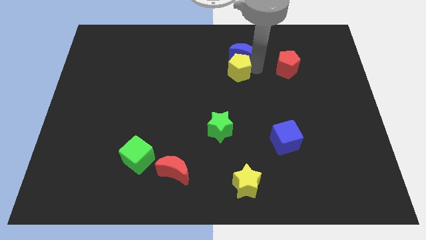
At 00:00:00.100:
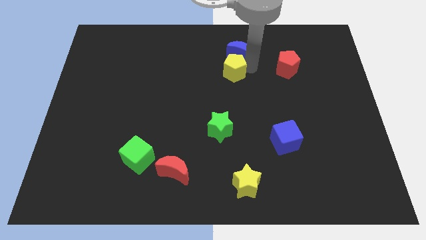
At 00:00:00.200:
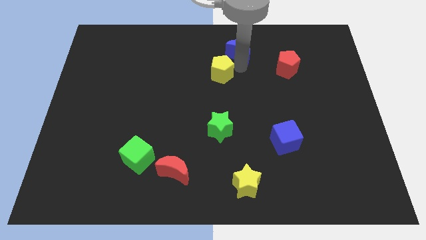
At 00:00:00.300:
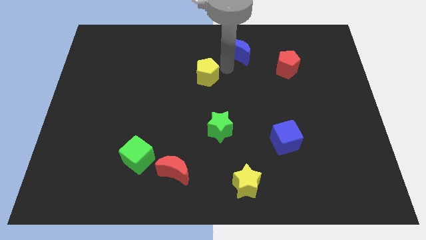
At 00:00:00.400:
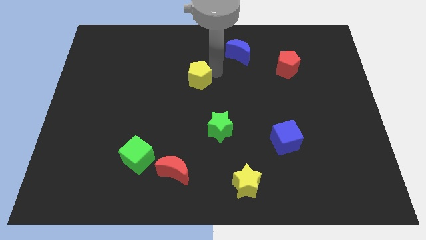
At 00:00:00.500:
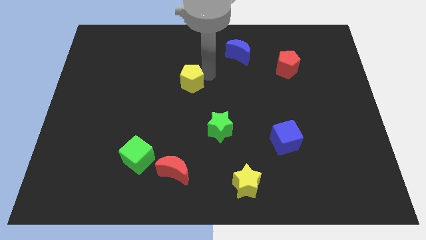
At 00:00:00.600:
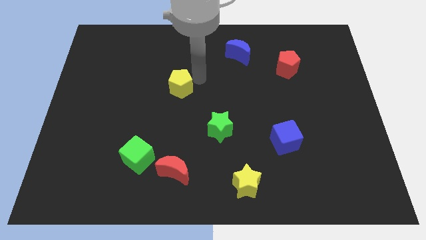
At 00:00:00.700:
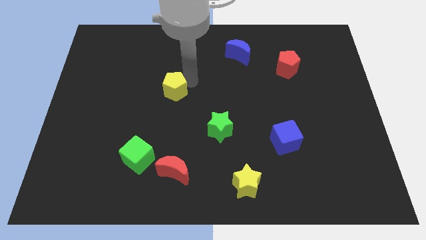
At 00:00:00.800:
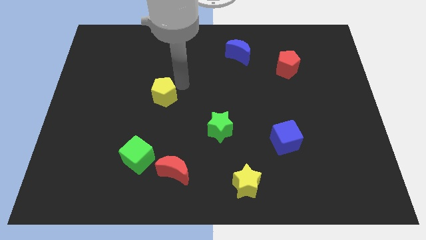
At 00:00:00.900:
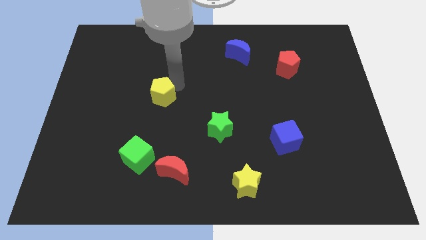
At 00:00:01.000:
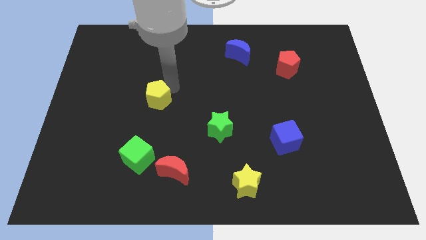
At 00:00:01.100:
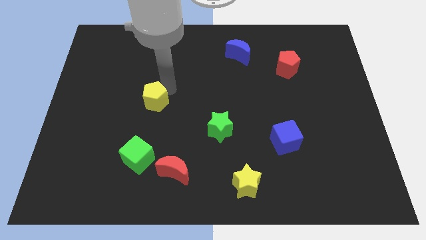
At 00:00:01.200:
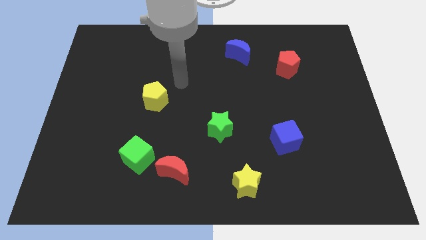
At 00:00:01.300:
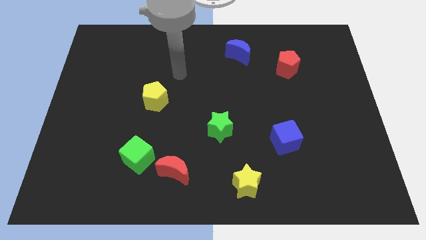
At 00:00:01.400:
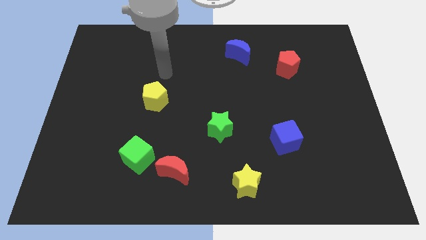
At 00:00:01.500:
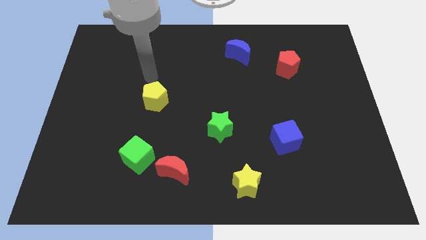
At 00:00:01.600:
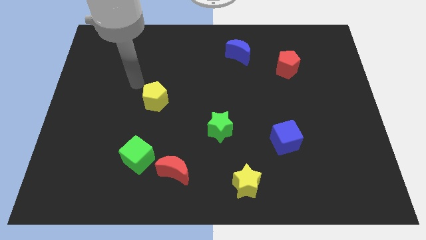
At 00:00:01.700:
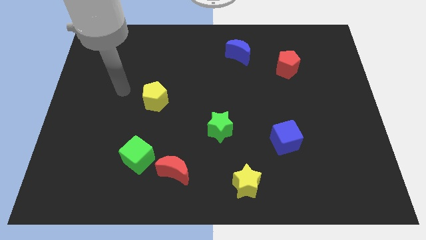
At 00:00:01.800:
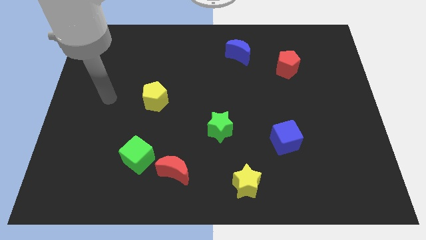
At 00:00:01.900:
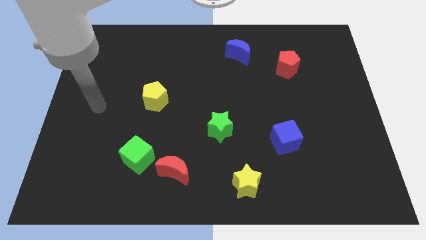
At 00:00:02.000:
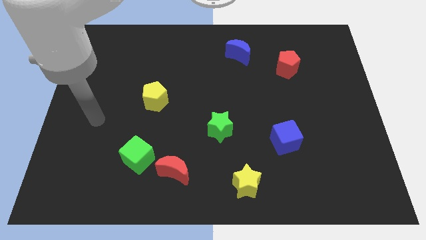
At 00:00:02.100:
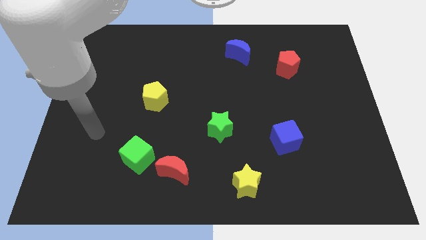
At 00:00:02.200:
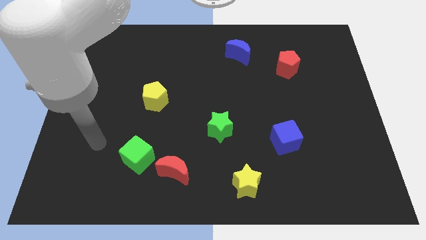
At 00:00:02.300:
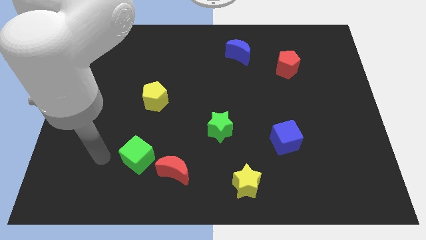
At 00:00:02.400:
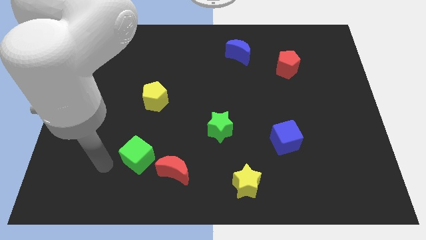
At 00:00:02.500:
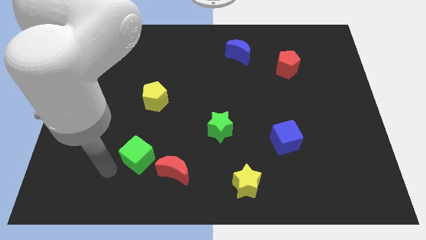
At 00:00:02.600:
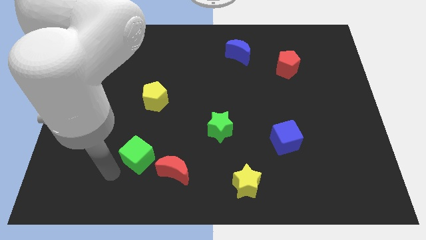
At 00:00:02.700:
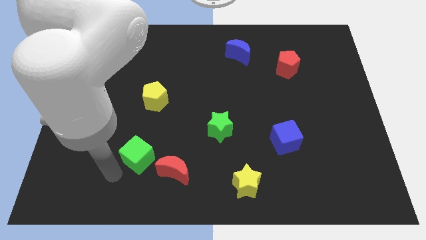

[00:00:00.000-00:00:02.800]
place the yellow pentagon above the green cube

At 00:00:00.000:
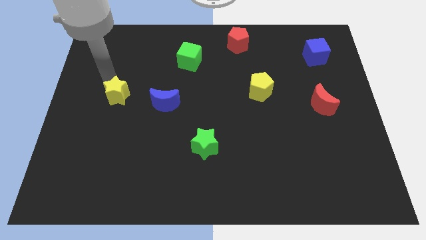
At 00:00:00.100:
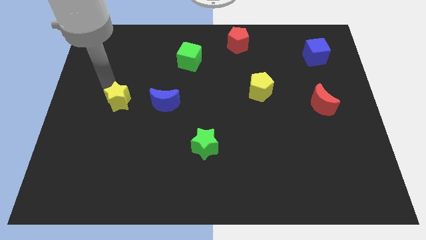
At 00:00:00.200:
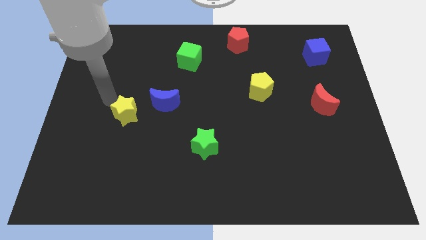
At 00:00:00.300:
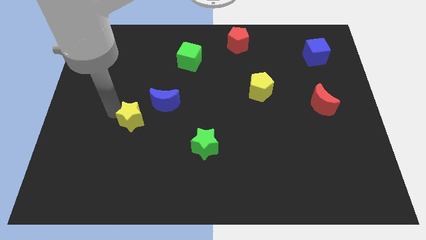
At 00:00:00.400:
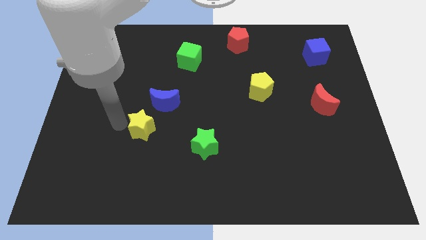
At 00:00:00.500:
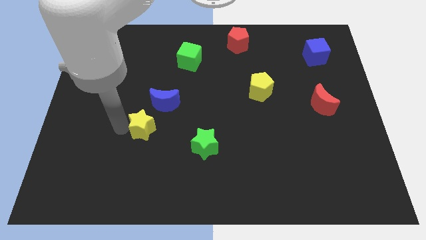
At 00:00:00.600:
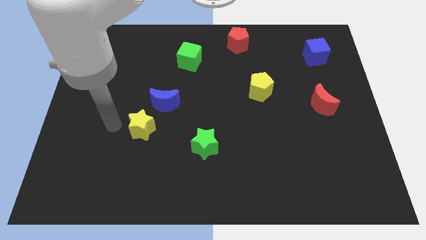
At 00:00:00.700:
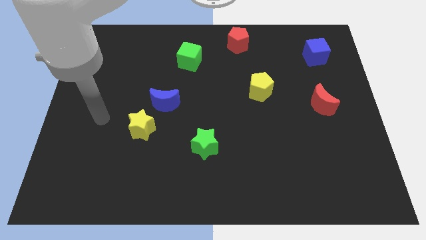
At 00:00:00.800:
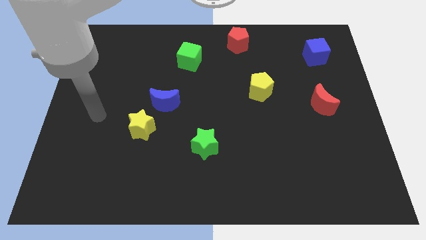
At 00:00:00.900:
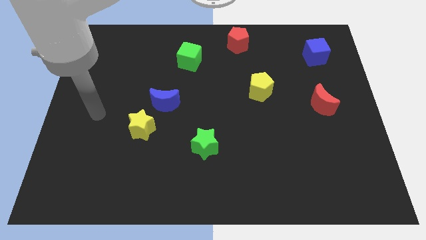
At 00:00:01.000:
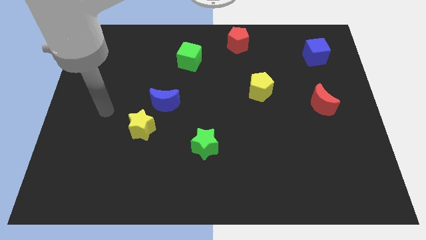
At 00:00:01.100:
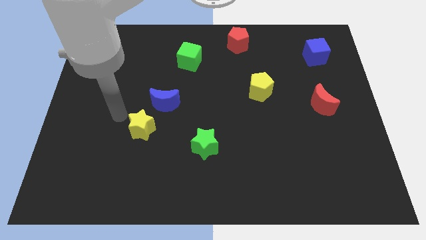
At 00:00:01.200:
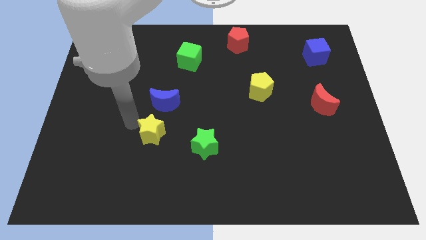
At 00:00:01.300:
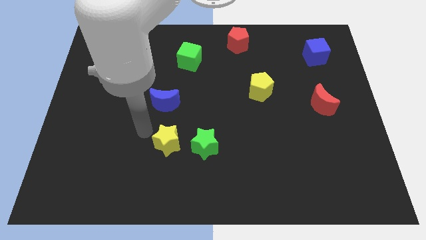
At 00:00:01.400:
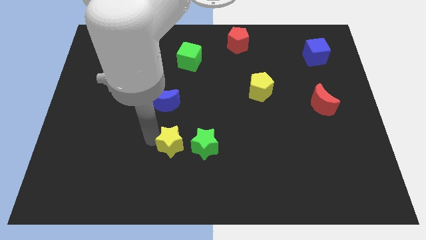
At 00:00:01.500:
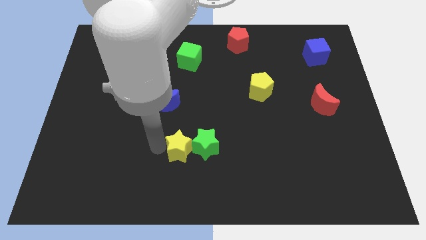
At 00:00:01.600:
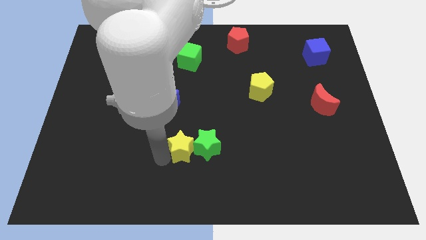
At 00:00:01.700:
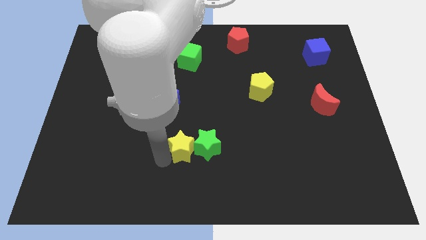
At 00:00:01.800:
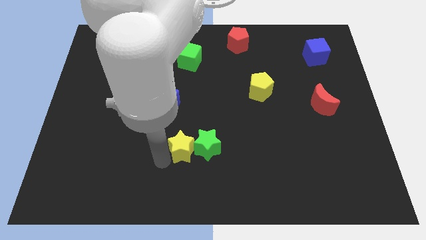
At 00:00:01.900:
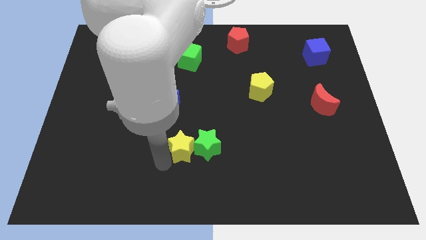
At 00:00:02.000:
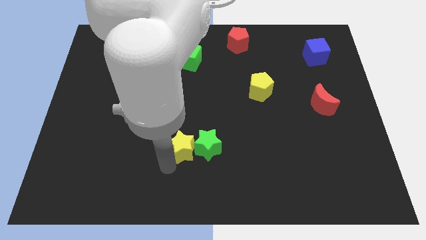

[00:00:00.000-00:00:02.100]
move the yellow star into the green star

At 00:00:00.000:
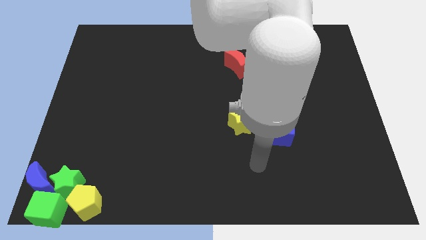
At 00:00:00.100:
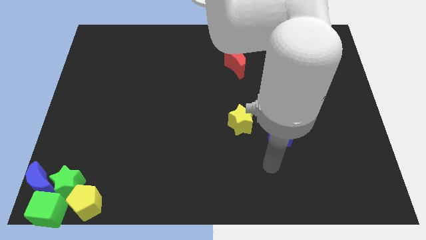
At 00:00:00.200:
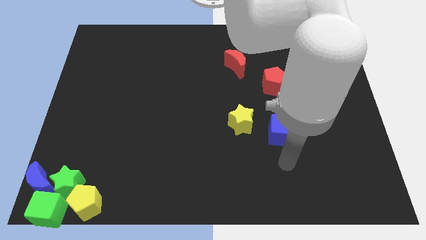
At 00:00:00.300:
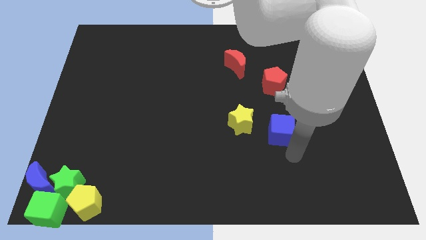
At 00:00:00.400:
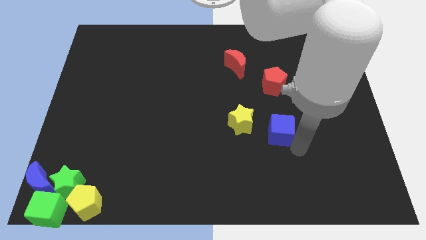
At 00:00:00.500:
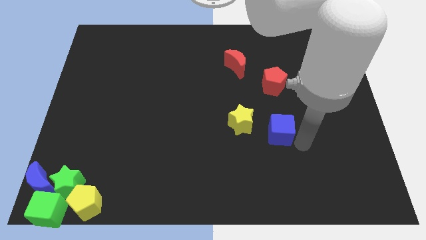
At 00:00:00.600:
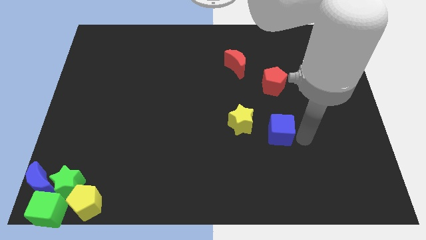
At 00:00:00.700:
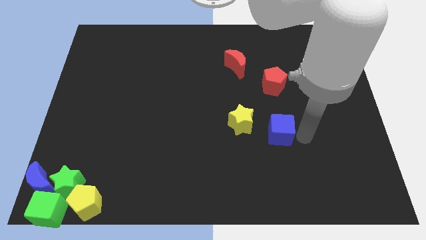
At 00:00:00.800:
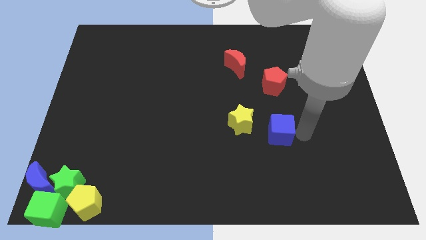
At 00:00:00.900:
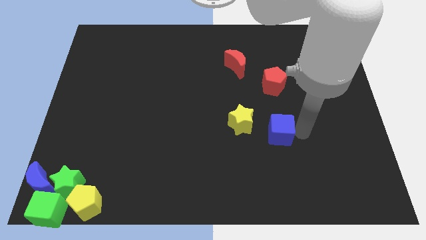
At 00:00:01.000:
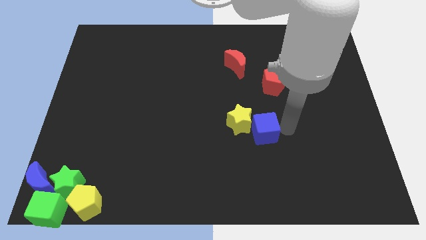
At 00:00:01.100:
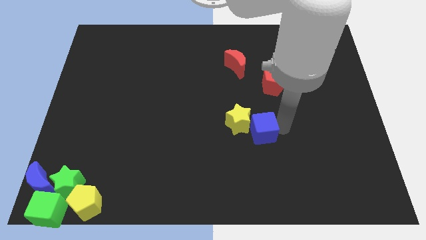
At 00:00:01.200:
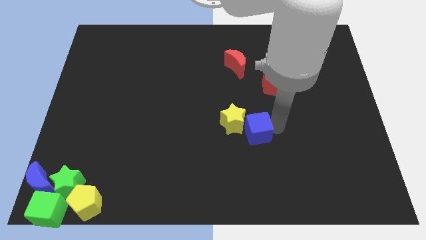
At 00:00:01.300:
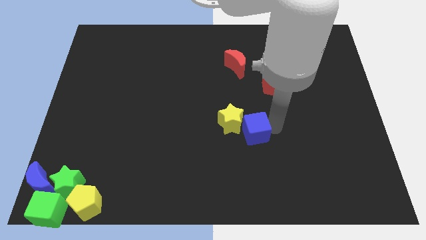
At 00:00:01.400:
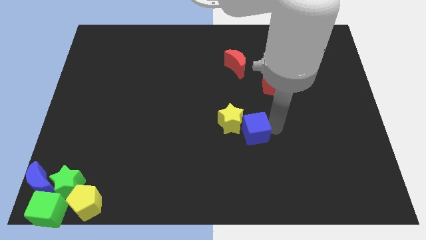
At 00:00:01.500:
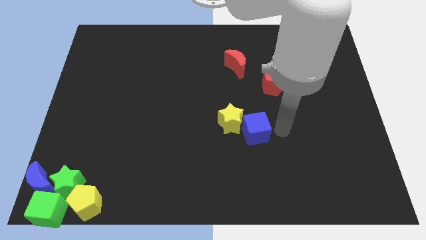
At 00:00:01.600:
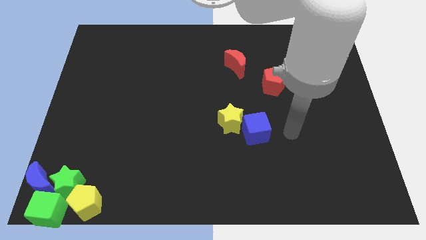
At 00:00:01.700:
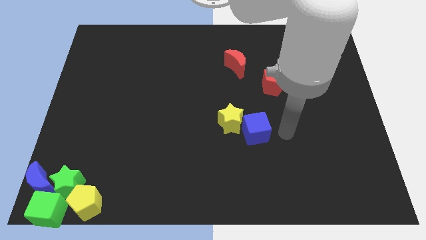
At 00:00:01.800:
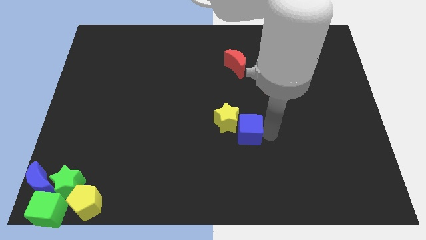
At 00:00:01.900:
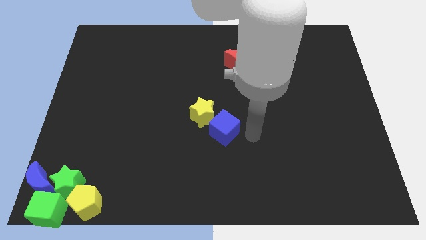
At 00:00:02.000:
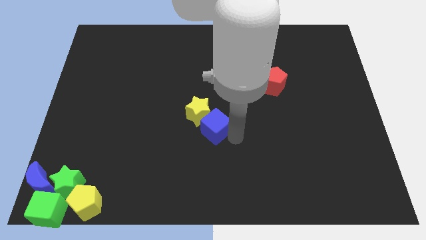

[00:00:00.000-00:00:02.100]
slide the blue cube and yellow star slightly to the left side of the board

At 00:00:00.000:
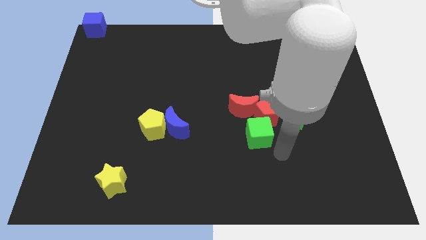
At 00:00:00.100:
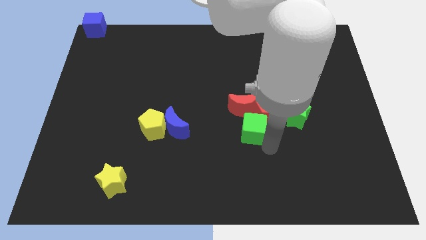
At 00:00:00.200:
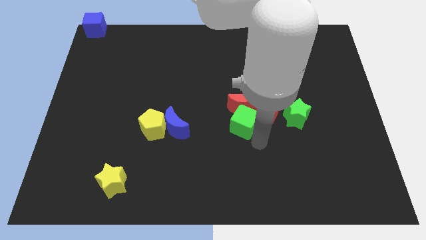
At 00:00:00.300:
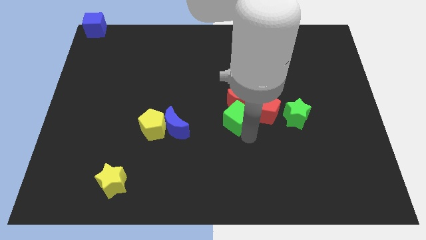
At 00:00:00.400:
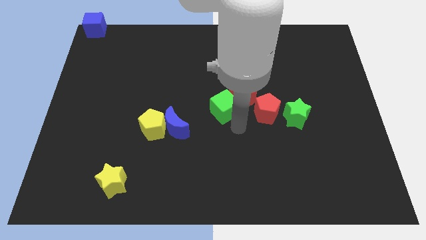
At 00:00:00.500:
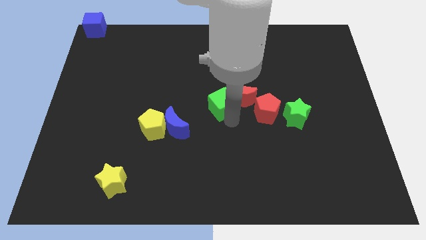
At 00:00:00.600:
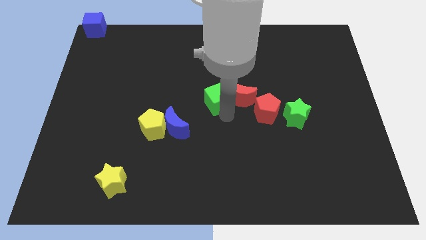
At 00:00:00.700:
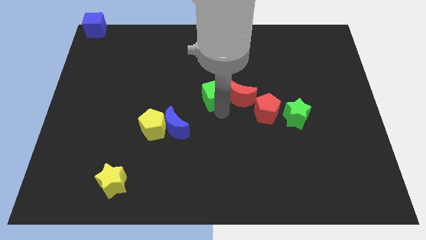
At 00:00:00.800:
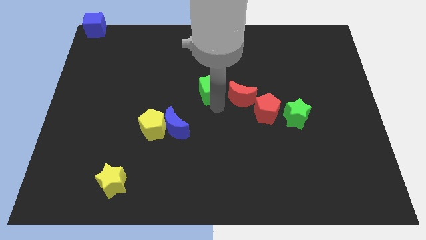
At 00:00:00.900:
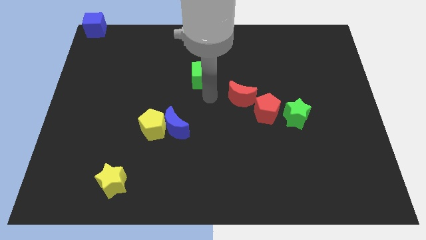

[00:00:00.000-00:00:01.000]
move green cube away from the red blocks

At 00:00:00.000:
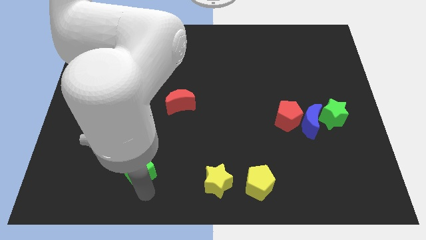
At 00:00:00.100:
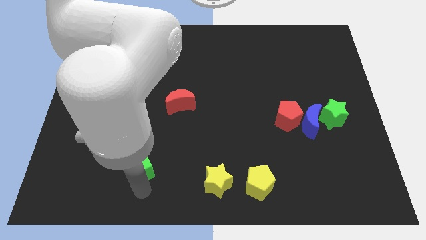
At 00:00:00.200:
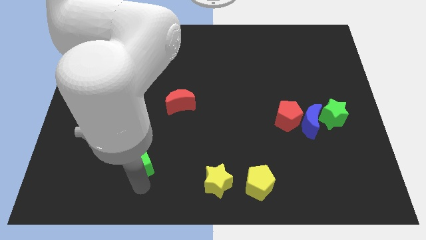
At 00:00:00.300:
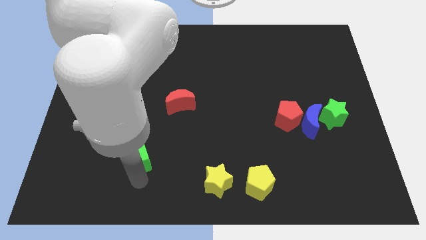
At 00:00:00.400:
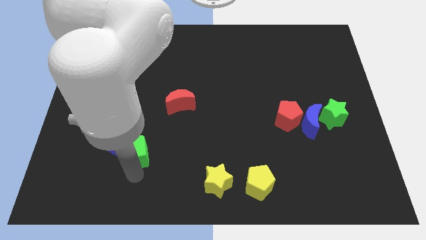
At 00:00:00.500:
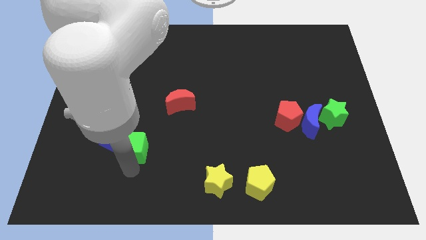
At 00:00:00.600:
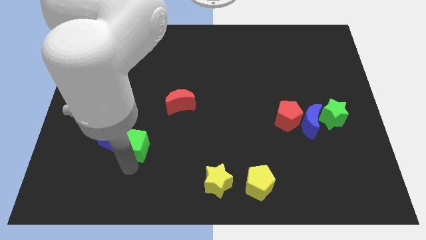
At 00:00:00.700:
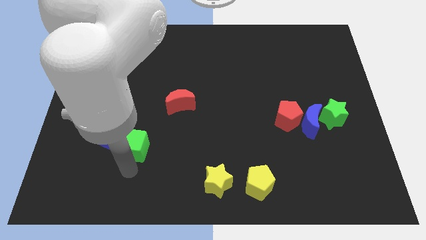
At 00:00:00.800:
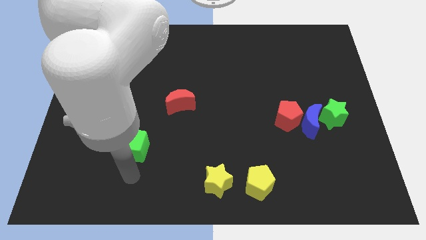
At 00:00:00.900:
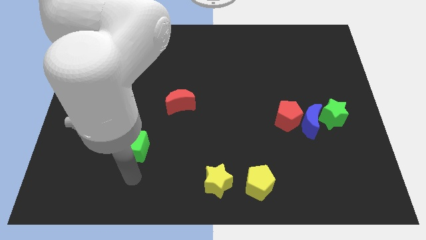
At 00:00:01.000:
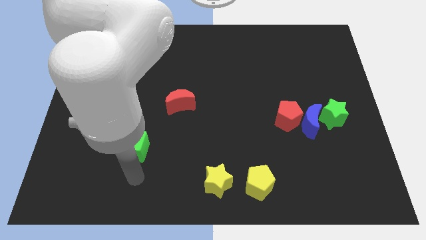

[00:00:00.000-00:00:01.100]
place the green cube to the right of the blue cube
